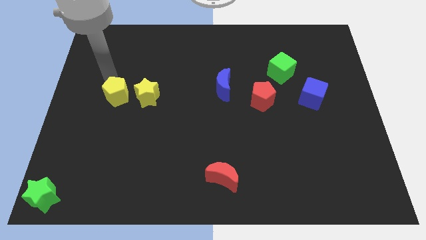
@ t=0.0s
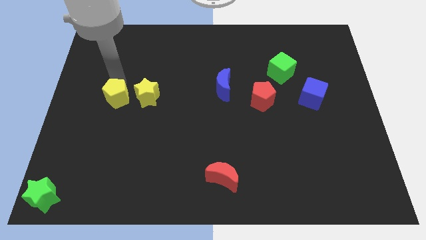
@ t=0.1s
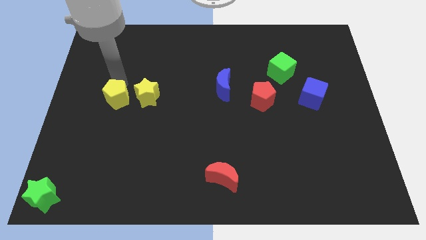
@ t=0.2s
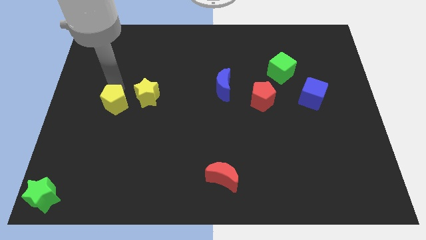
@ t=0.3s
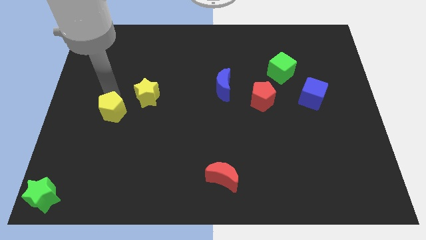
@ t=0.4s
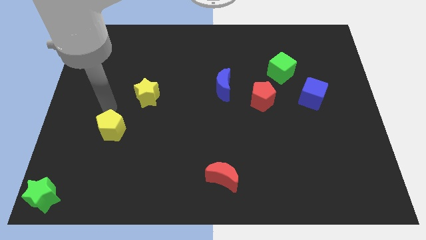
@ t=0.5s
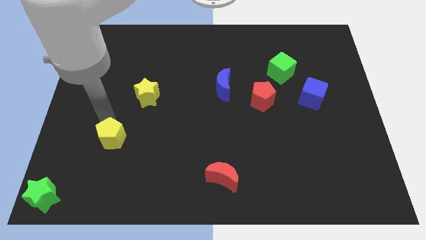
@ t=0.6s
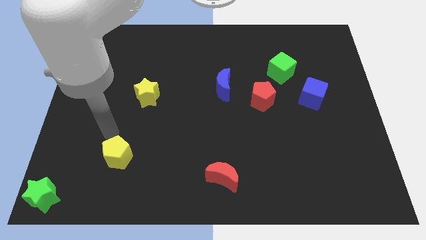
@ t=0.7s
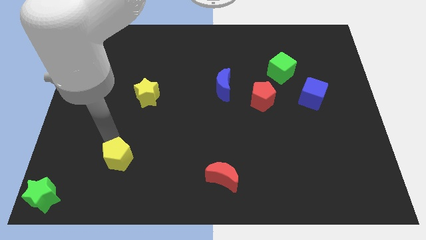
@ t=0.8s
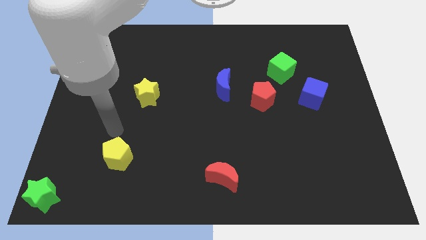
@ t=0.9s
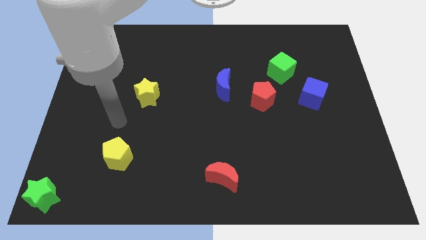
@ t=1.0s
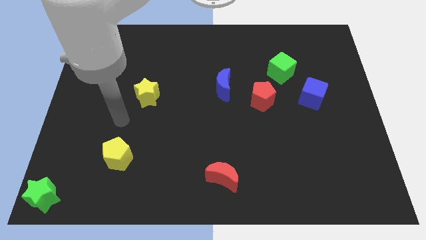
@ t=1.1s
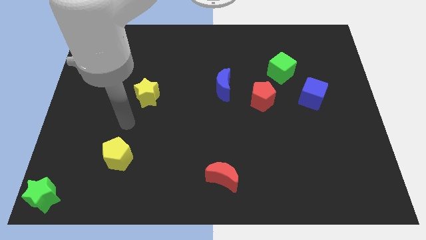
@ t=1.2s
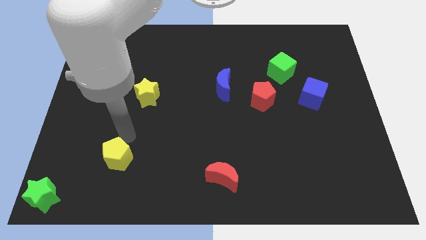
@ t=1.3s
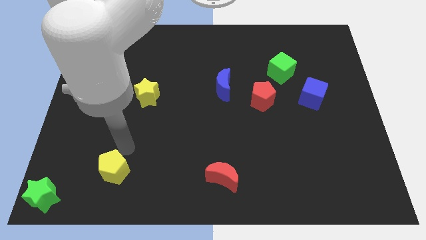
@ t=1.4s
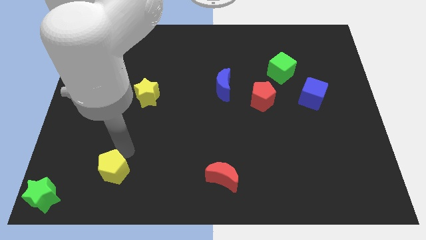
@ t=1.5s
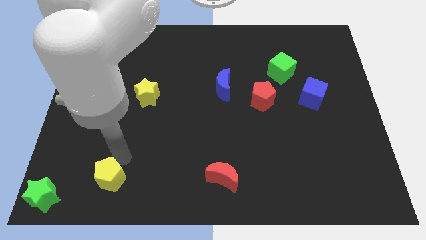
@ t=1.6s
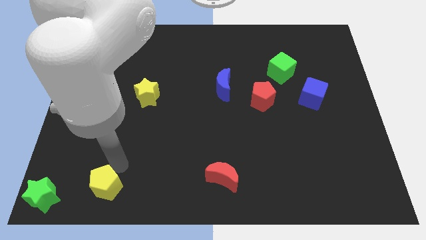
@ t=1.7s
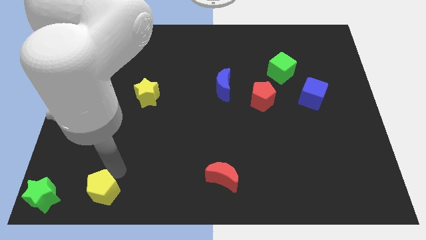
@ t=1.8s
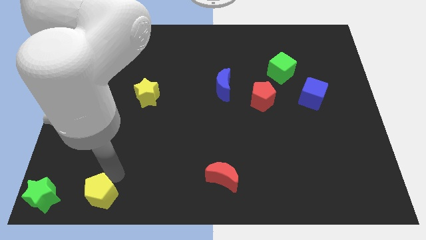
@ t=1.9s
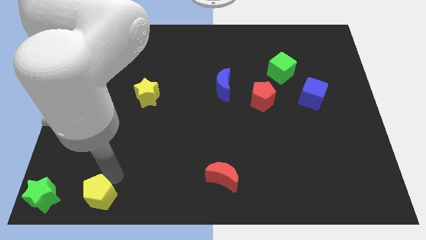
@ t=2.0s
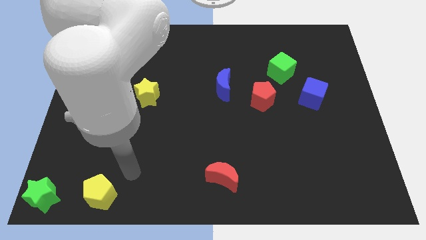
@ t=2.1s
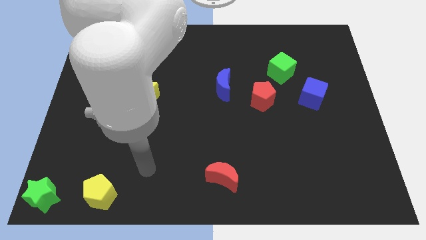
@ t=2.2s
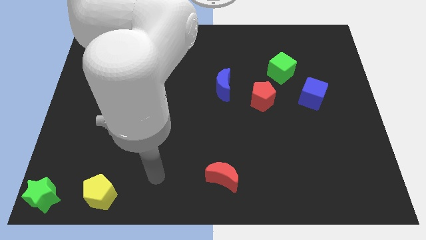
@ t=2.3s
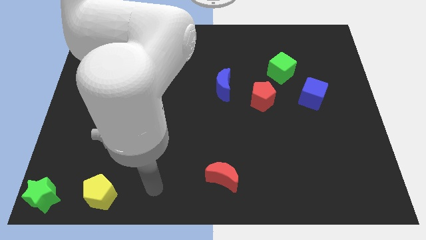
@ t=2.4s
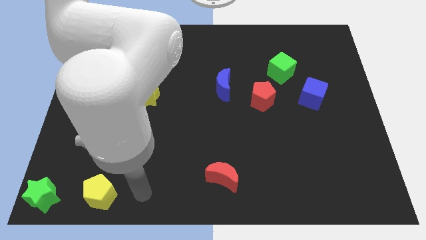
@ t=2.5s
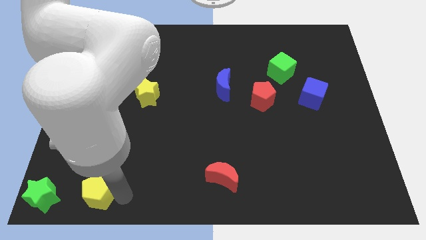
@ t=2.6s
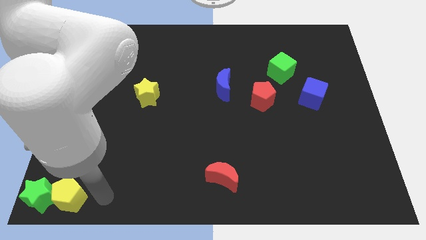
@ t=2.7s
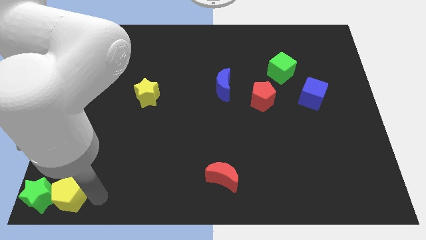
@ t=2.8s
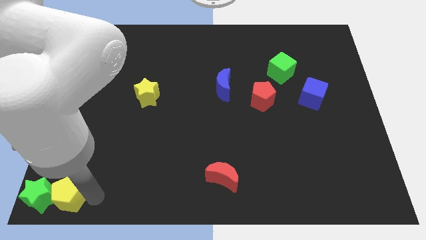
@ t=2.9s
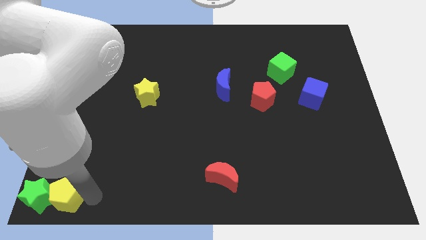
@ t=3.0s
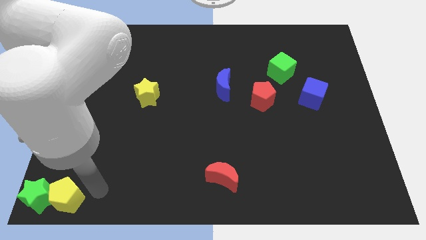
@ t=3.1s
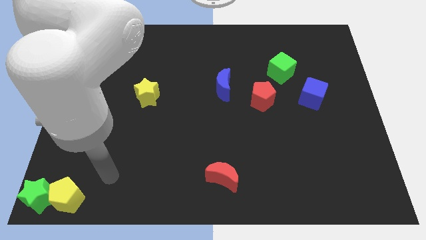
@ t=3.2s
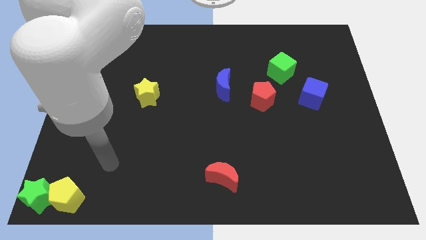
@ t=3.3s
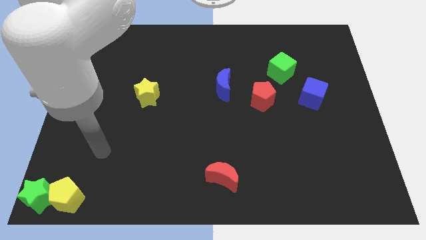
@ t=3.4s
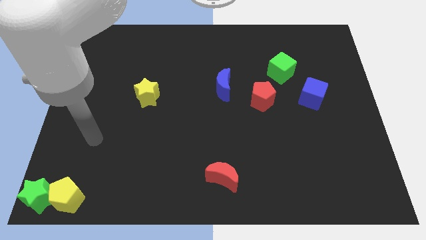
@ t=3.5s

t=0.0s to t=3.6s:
push the yellow pentagon into the green star

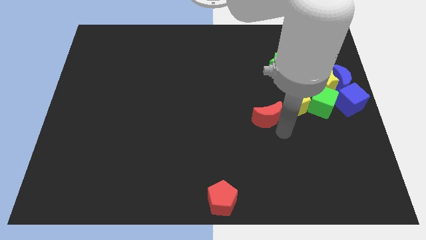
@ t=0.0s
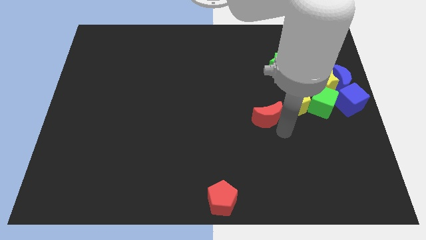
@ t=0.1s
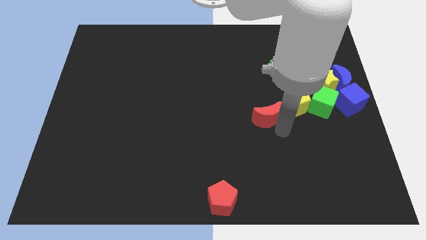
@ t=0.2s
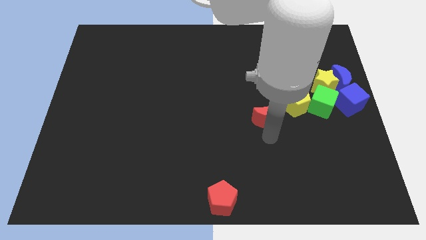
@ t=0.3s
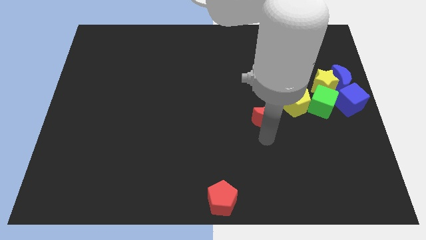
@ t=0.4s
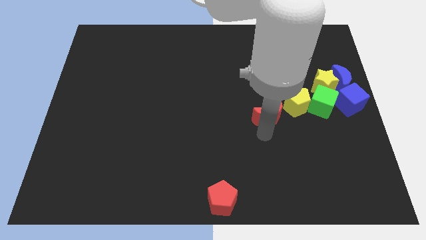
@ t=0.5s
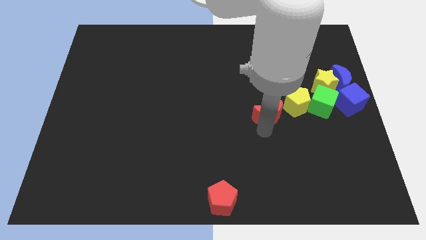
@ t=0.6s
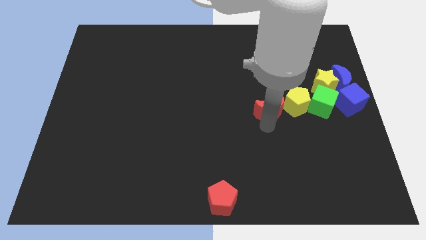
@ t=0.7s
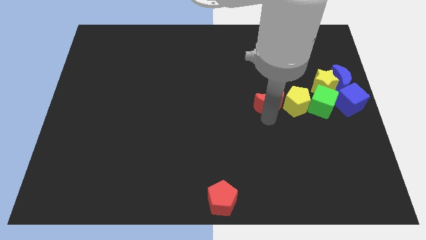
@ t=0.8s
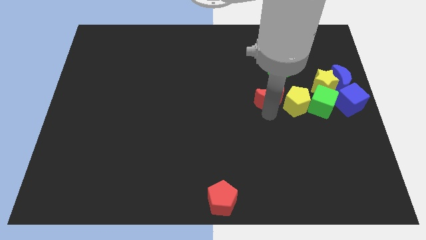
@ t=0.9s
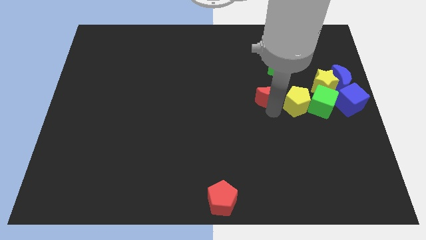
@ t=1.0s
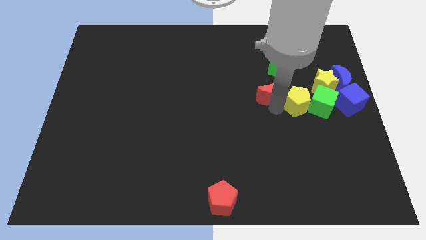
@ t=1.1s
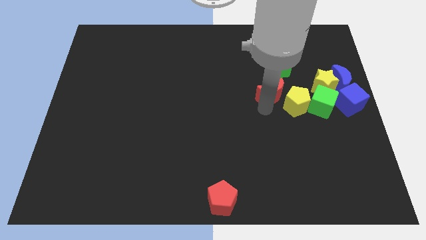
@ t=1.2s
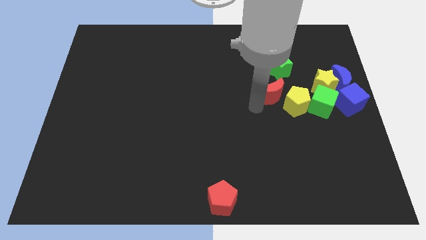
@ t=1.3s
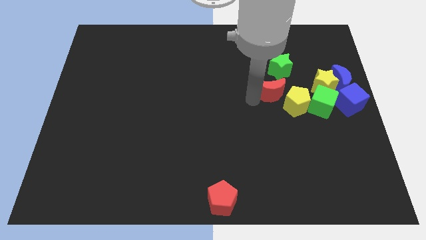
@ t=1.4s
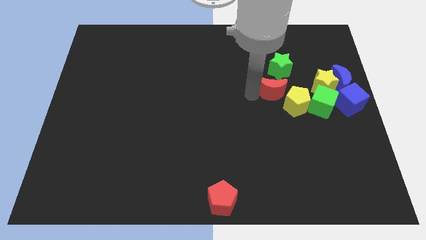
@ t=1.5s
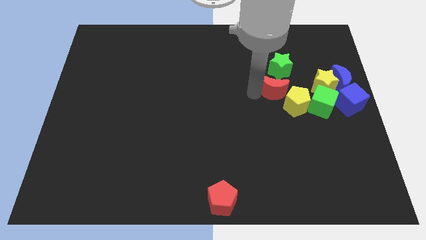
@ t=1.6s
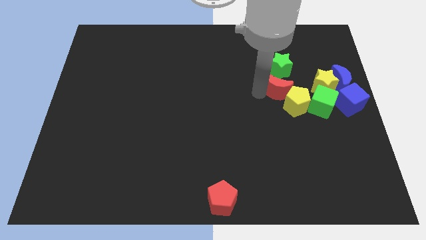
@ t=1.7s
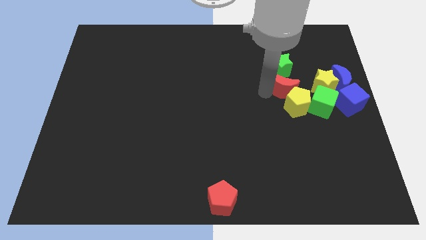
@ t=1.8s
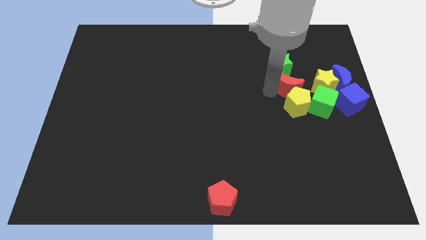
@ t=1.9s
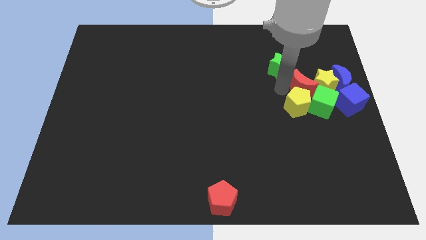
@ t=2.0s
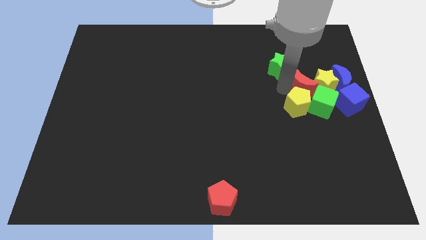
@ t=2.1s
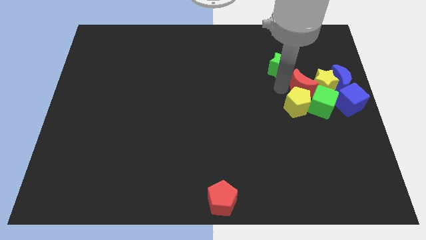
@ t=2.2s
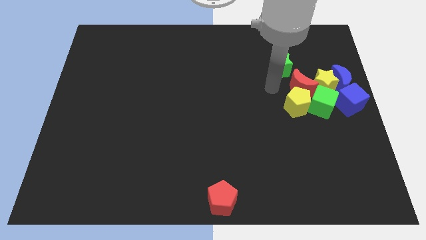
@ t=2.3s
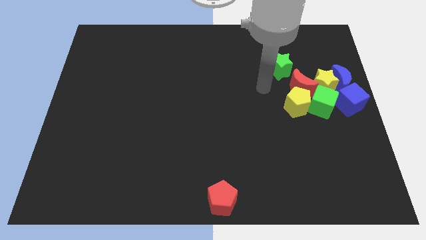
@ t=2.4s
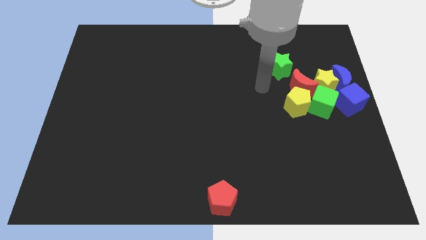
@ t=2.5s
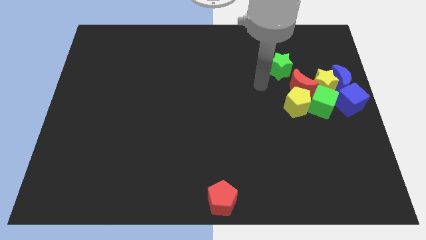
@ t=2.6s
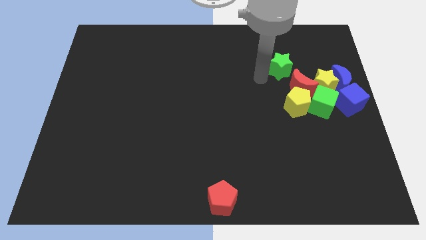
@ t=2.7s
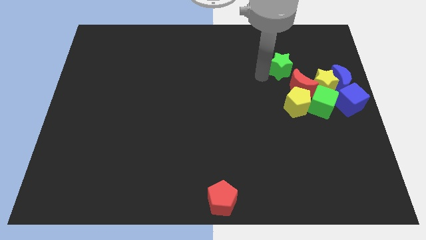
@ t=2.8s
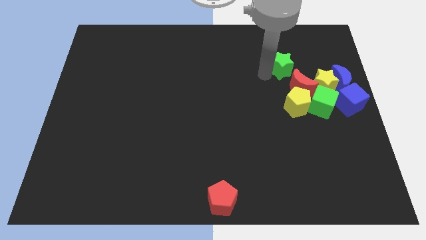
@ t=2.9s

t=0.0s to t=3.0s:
move the red moon to the top of the yellow pentagon

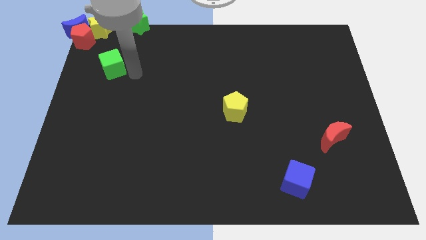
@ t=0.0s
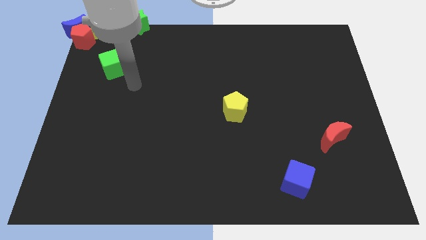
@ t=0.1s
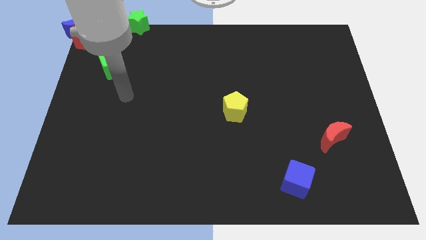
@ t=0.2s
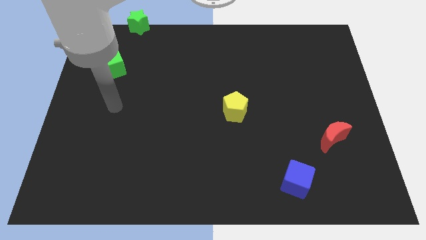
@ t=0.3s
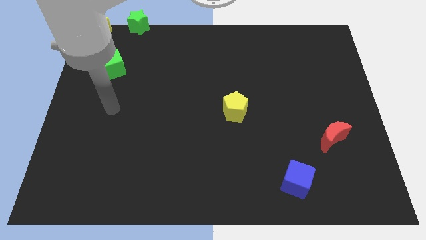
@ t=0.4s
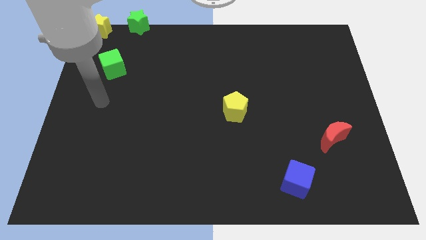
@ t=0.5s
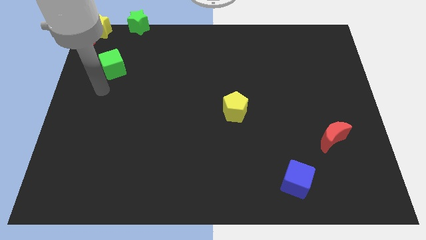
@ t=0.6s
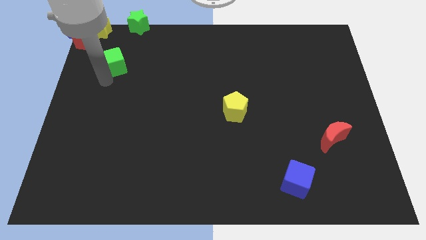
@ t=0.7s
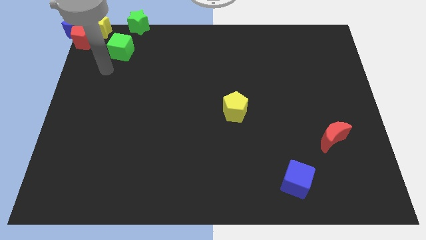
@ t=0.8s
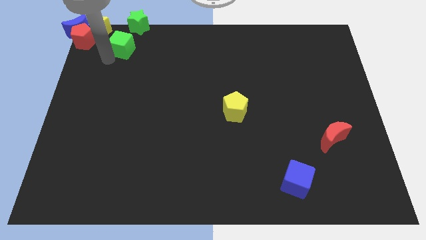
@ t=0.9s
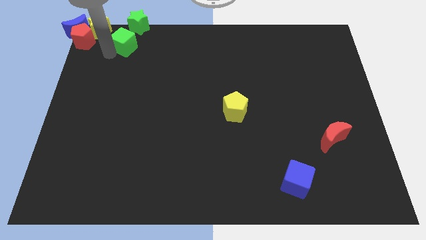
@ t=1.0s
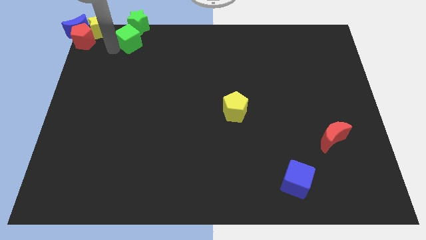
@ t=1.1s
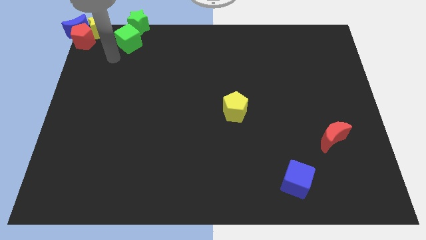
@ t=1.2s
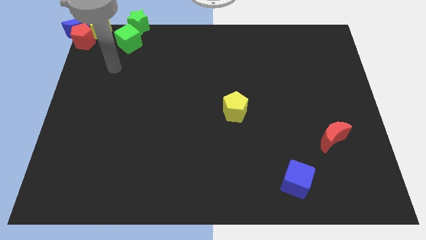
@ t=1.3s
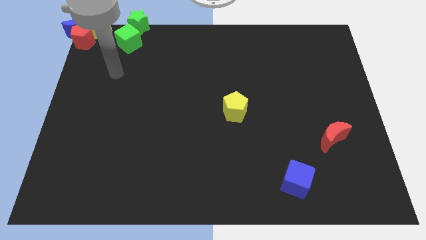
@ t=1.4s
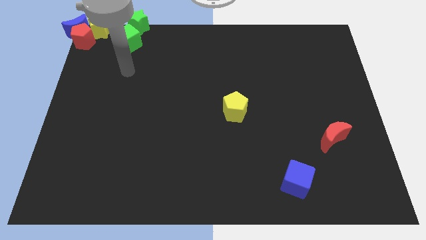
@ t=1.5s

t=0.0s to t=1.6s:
move the green cube bottom left to the green star

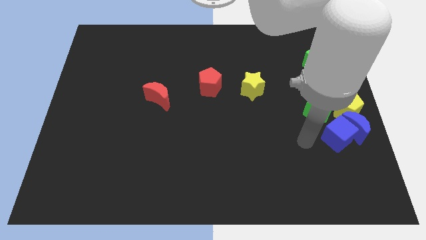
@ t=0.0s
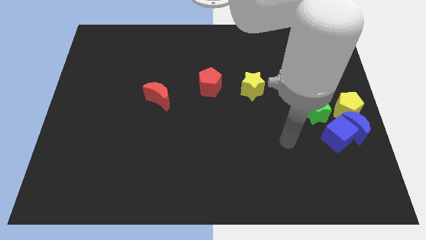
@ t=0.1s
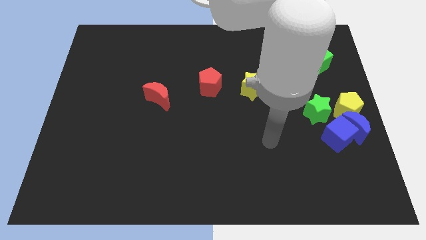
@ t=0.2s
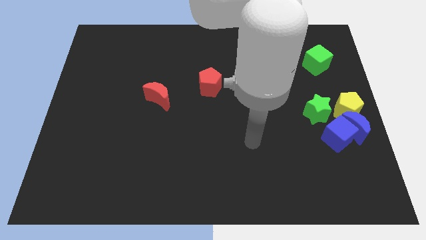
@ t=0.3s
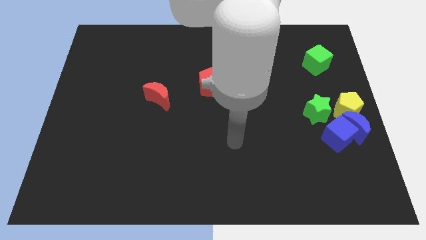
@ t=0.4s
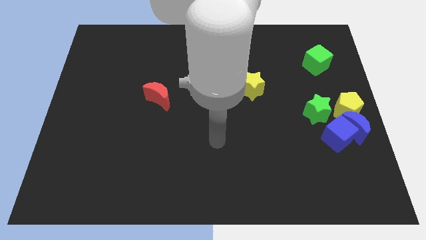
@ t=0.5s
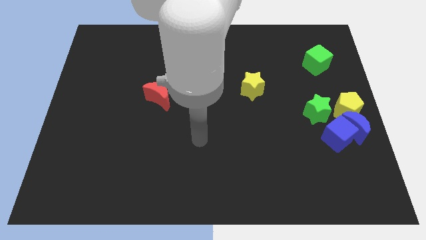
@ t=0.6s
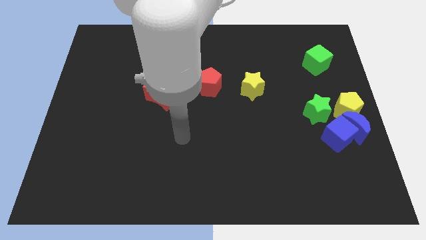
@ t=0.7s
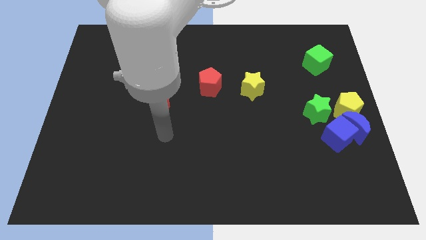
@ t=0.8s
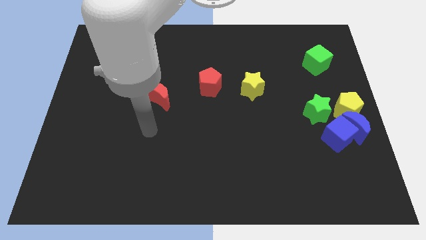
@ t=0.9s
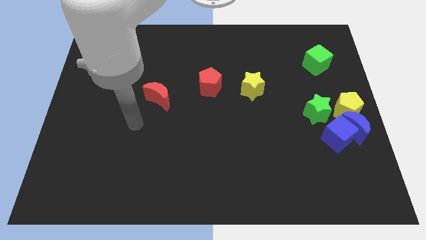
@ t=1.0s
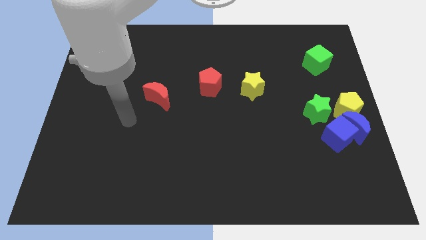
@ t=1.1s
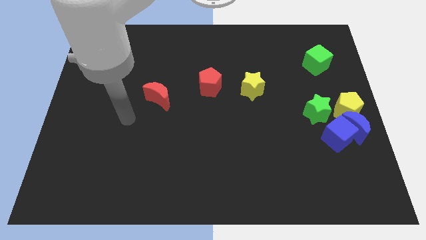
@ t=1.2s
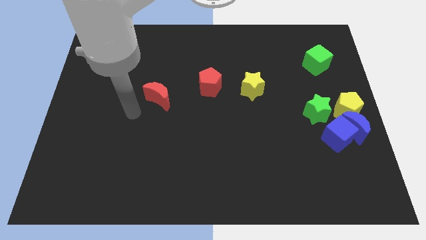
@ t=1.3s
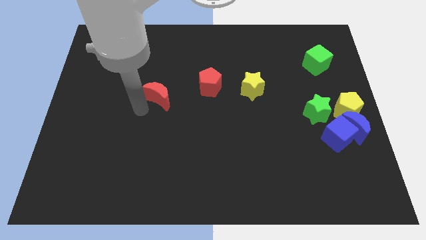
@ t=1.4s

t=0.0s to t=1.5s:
move your arm near to the red moon
